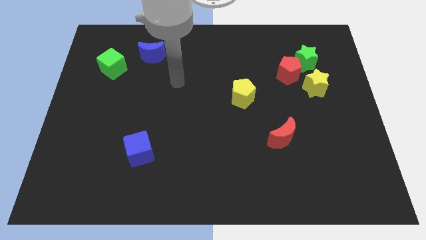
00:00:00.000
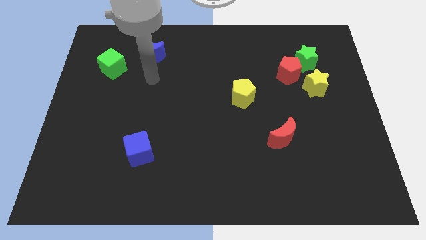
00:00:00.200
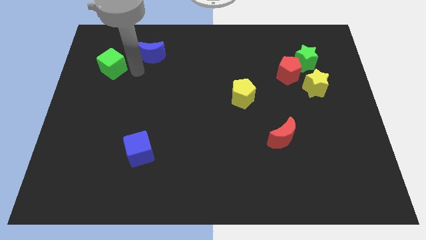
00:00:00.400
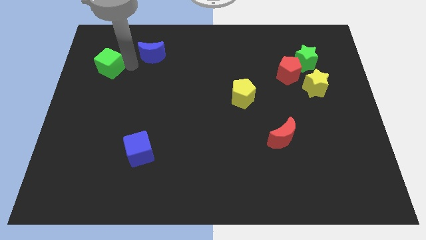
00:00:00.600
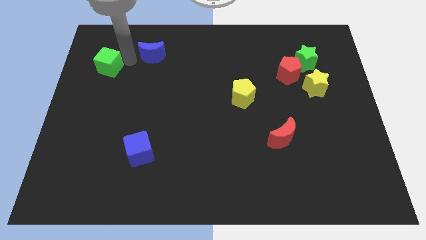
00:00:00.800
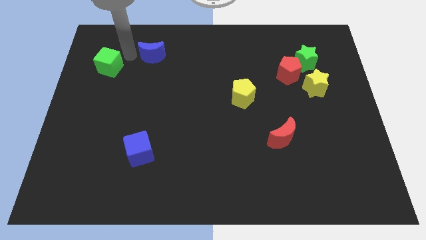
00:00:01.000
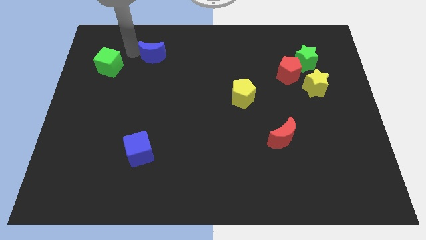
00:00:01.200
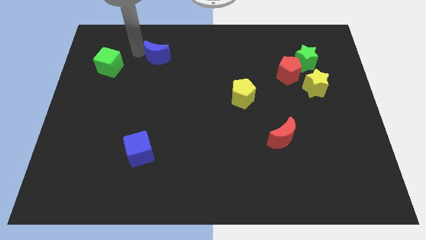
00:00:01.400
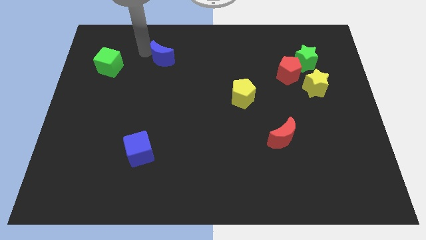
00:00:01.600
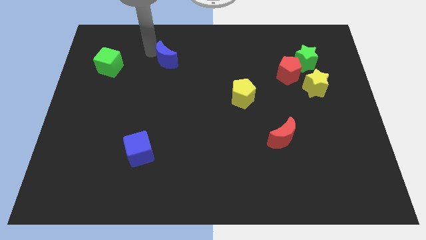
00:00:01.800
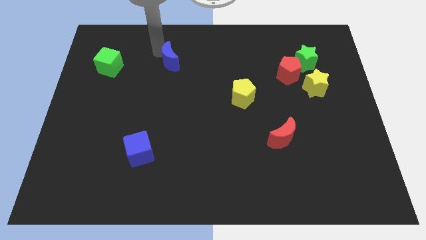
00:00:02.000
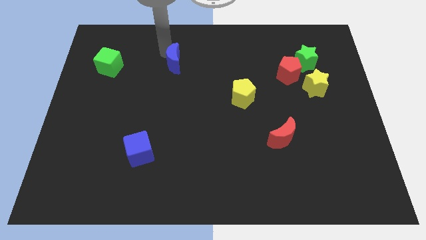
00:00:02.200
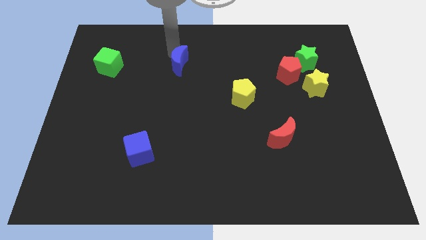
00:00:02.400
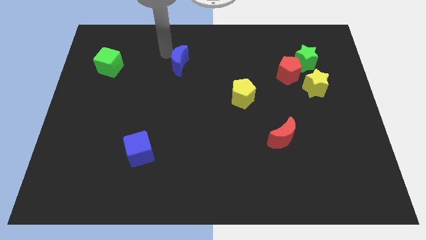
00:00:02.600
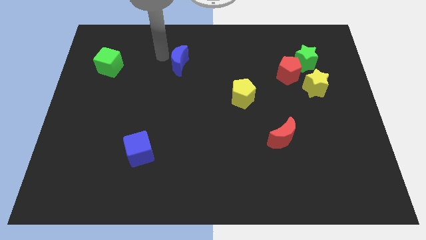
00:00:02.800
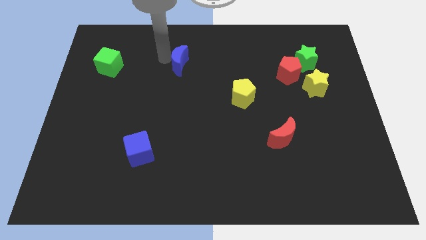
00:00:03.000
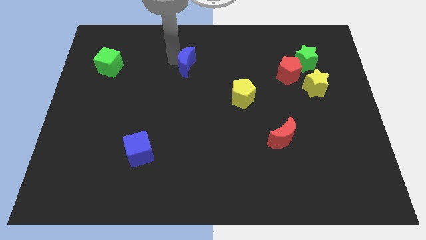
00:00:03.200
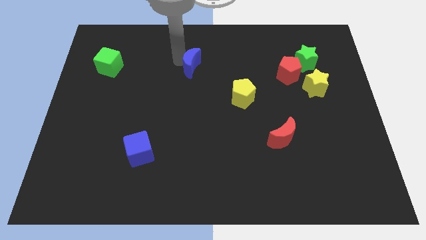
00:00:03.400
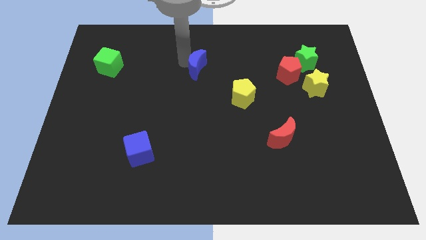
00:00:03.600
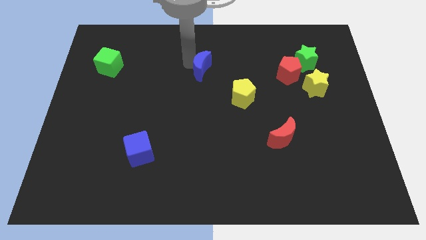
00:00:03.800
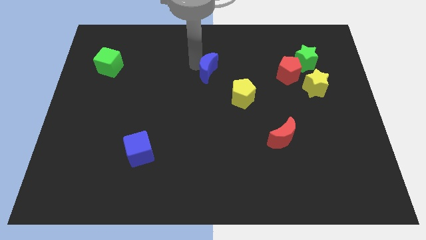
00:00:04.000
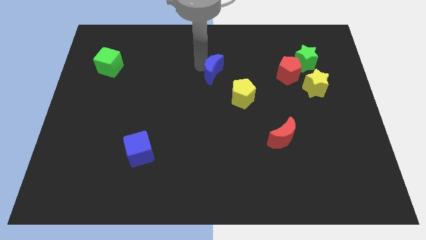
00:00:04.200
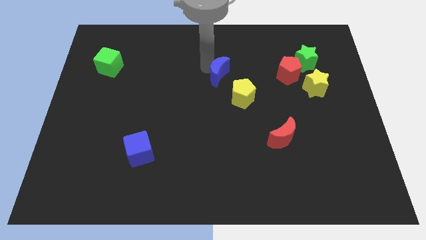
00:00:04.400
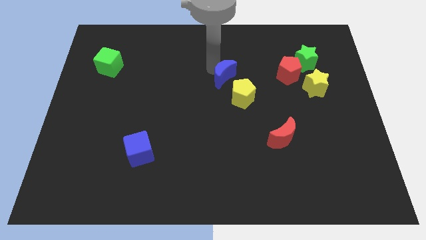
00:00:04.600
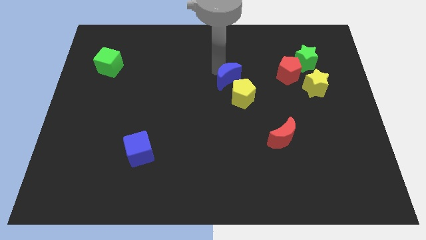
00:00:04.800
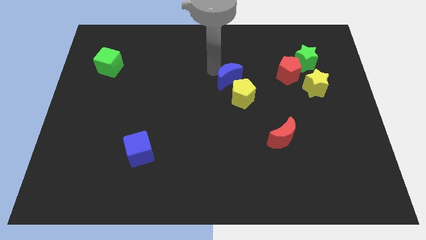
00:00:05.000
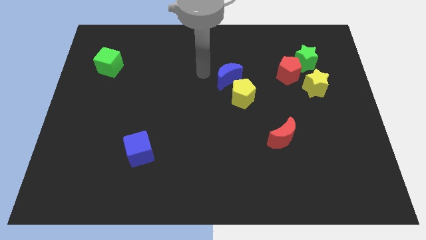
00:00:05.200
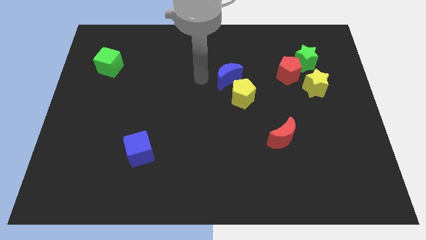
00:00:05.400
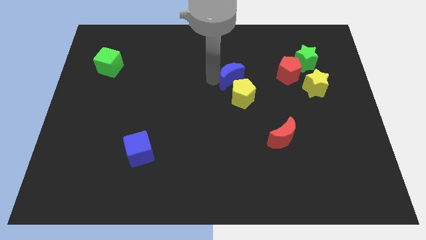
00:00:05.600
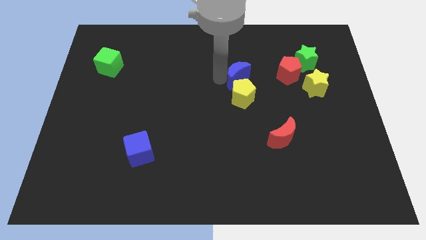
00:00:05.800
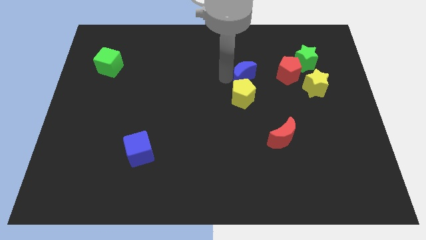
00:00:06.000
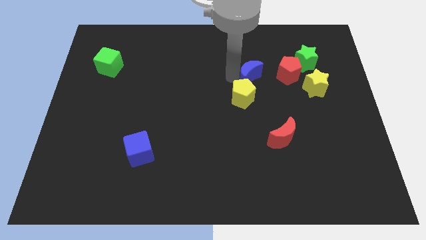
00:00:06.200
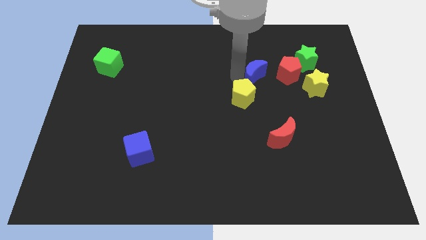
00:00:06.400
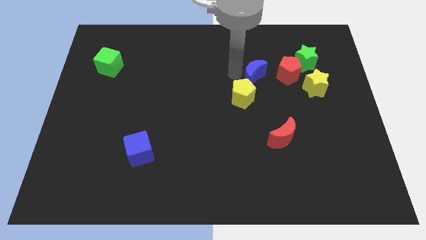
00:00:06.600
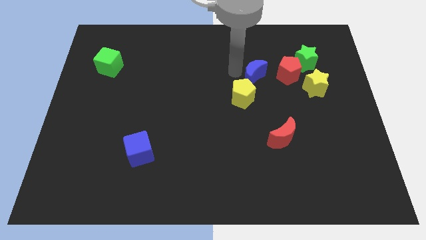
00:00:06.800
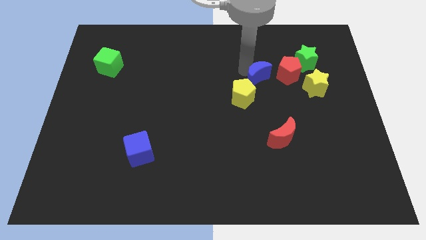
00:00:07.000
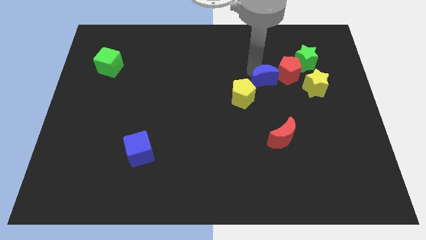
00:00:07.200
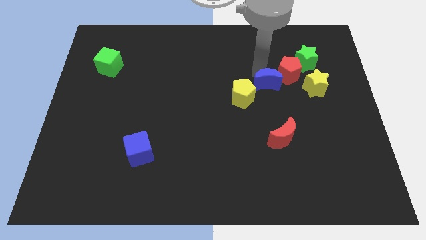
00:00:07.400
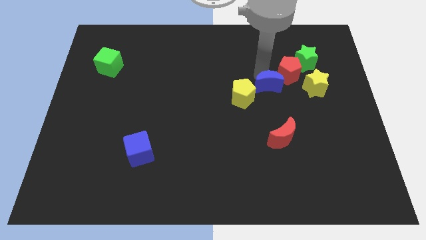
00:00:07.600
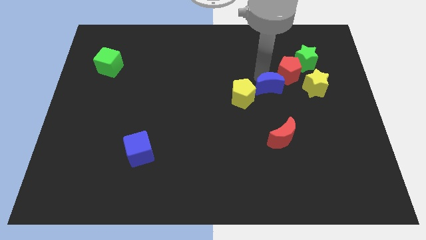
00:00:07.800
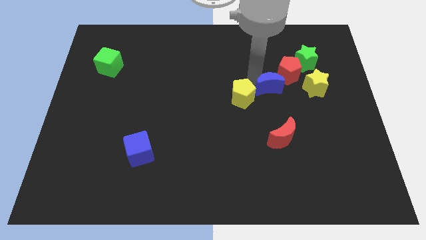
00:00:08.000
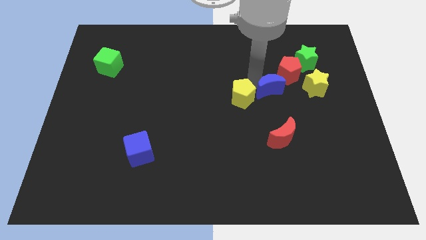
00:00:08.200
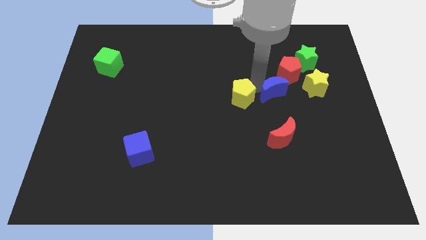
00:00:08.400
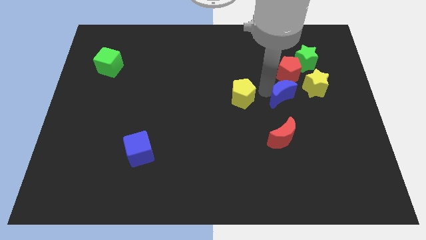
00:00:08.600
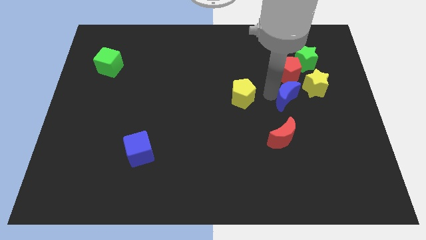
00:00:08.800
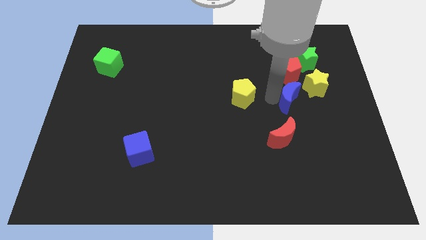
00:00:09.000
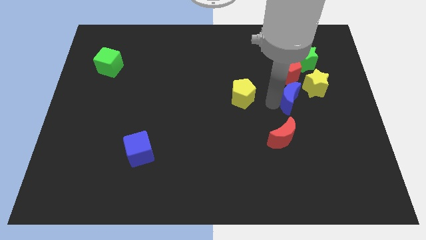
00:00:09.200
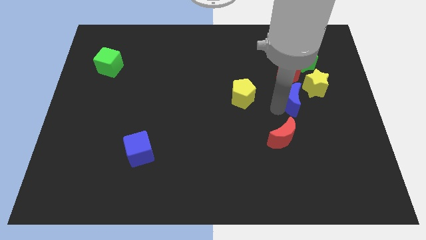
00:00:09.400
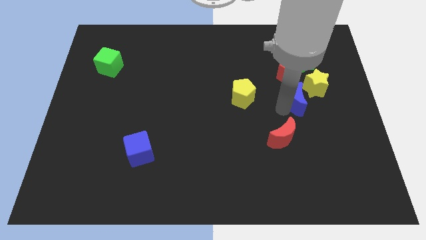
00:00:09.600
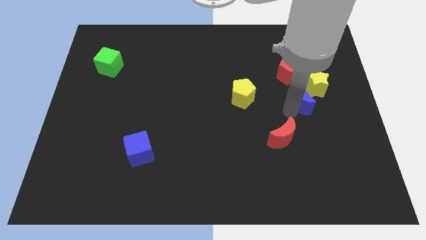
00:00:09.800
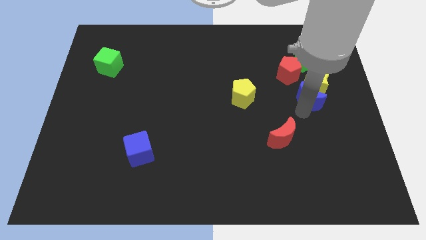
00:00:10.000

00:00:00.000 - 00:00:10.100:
put the blue moon next to the yellow star

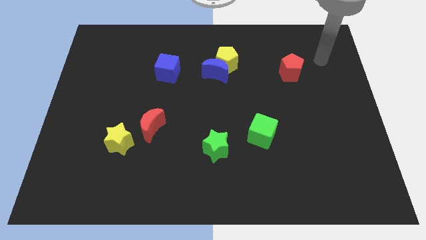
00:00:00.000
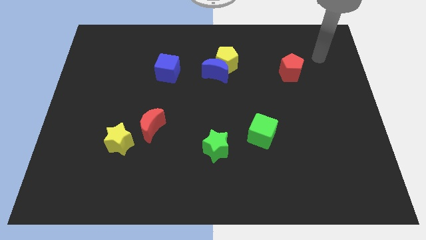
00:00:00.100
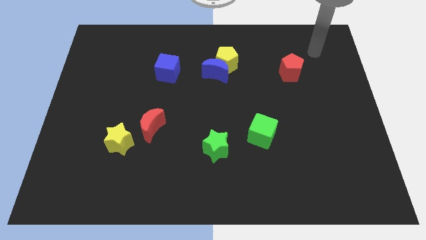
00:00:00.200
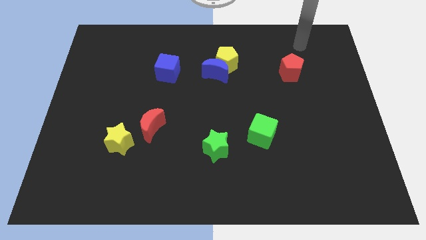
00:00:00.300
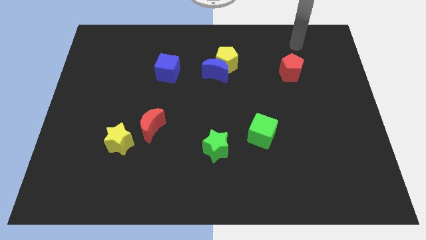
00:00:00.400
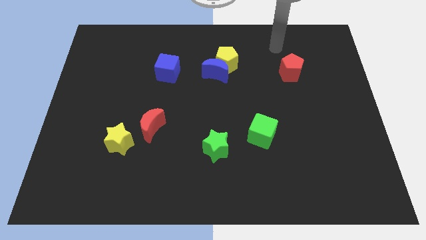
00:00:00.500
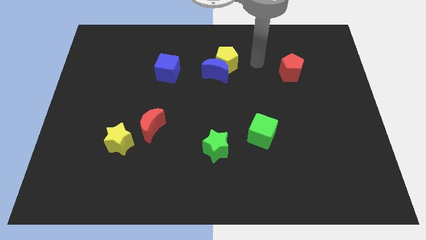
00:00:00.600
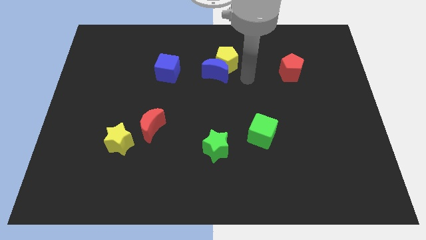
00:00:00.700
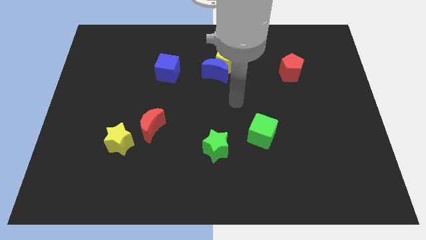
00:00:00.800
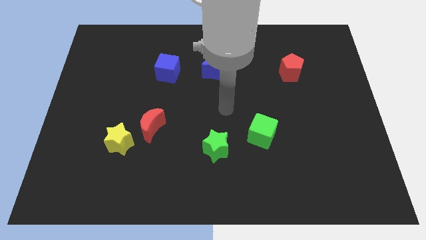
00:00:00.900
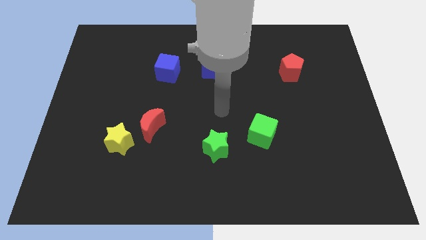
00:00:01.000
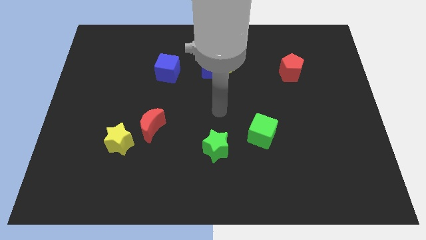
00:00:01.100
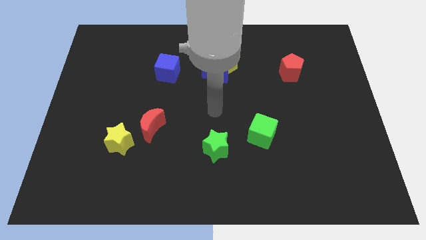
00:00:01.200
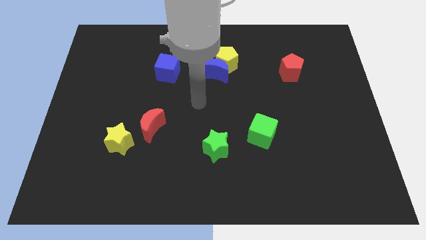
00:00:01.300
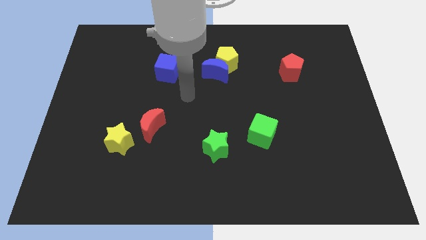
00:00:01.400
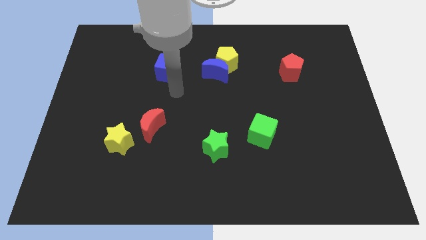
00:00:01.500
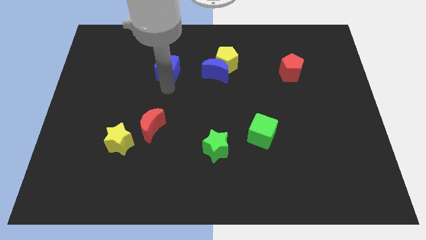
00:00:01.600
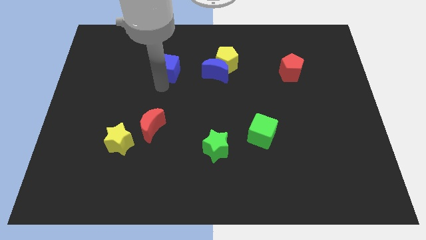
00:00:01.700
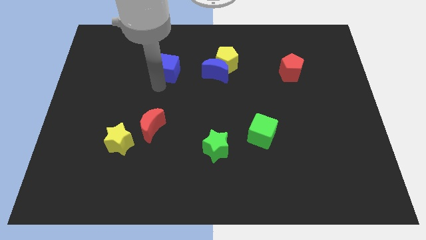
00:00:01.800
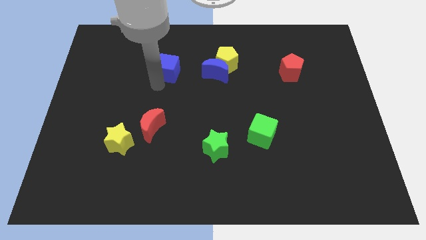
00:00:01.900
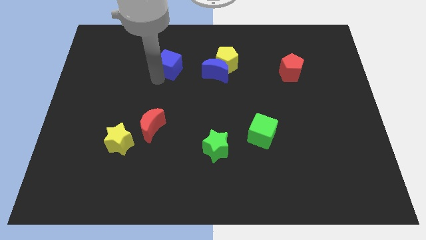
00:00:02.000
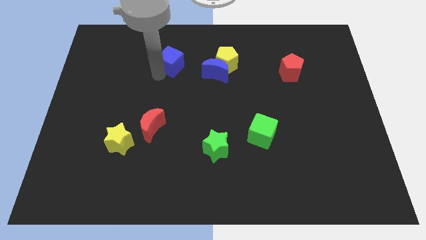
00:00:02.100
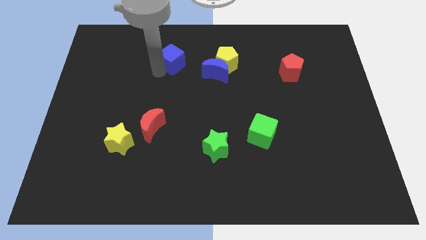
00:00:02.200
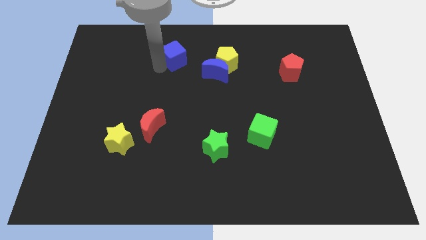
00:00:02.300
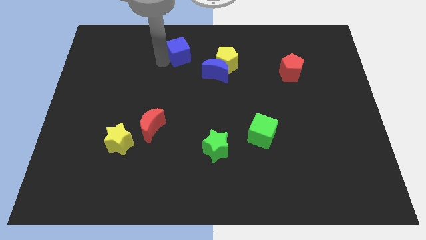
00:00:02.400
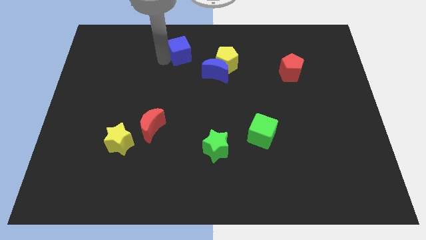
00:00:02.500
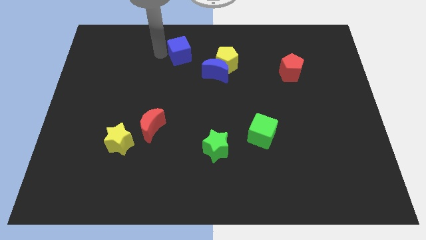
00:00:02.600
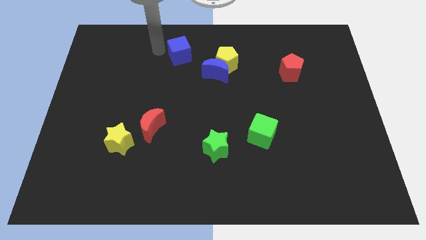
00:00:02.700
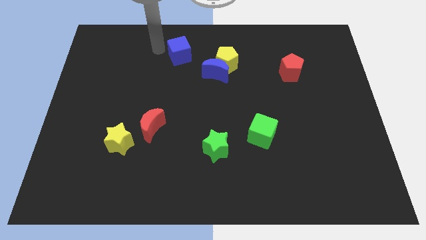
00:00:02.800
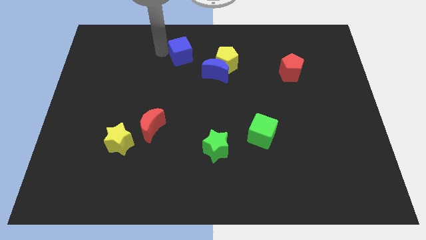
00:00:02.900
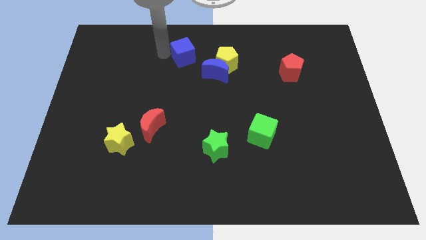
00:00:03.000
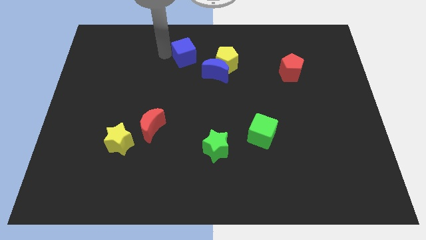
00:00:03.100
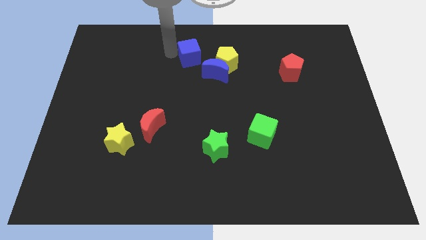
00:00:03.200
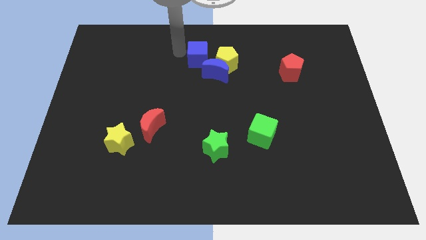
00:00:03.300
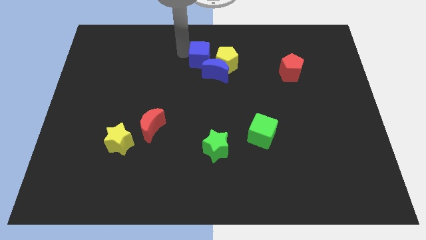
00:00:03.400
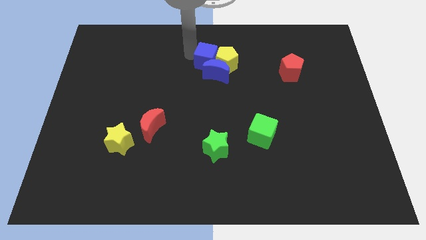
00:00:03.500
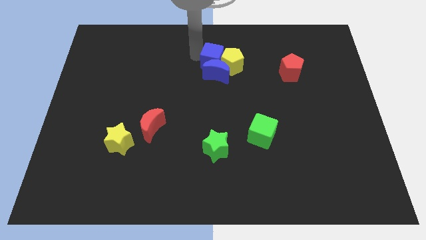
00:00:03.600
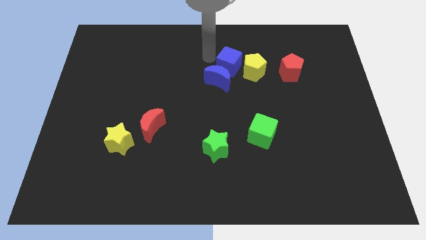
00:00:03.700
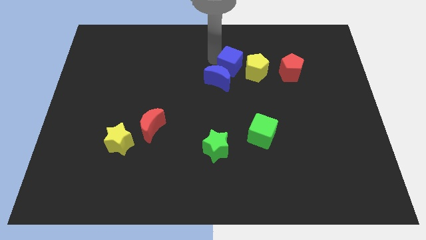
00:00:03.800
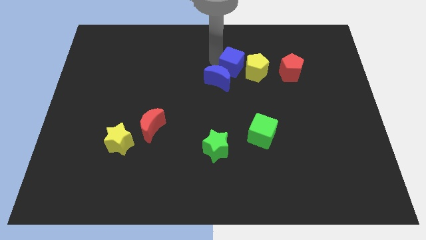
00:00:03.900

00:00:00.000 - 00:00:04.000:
move the blue cube towards the yellow pentagon
